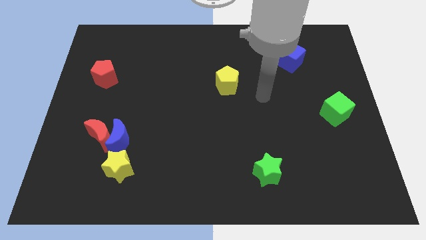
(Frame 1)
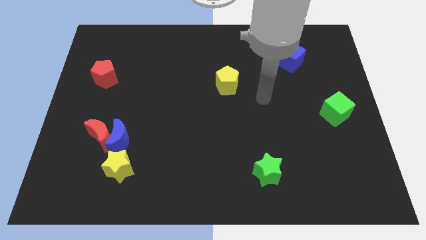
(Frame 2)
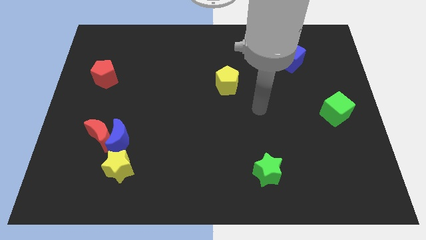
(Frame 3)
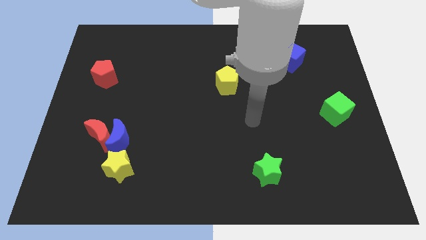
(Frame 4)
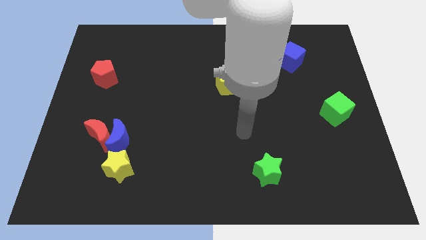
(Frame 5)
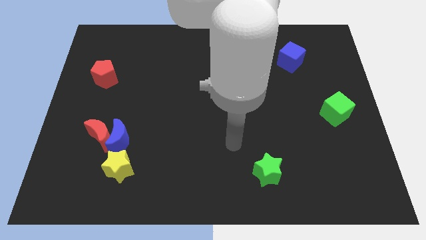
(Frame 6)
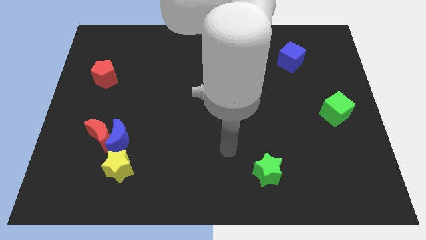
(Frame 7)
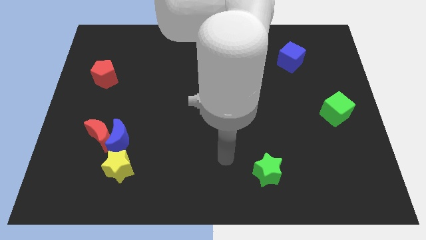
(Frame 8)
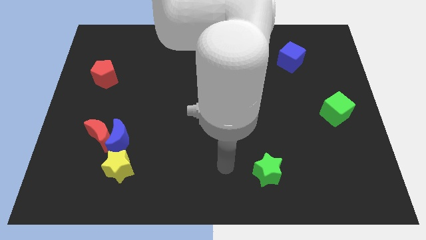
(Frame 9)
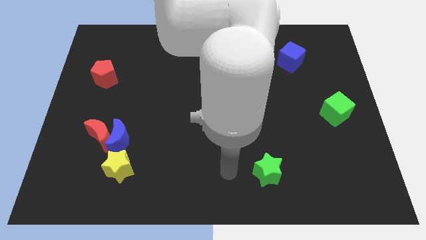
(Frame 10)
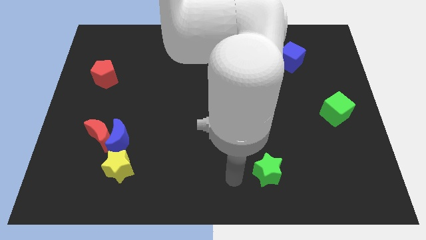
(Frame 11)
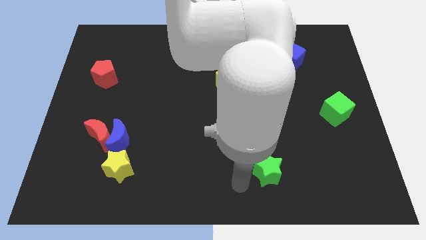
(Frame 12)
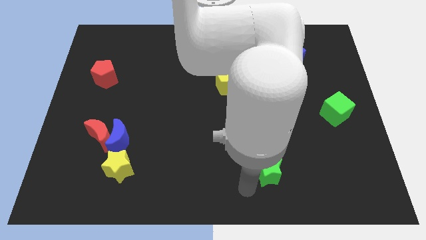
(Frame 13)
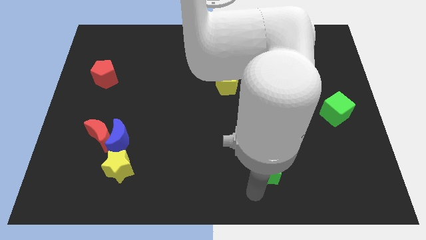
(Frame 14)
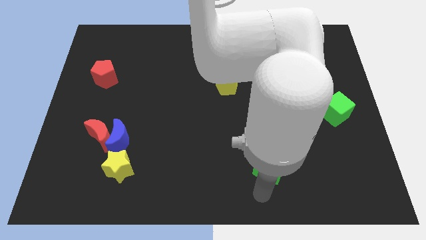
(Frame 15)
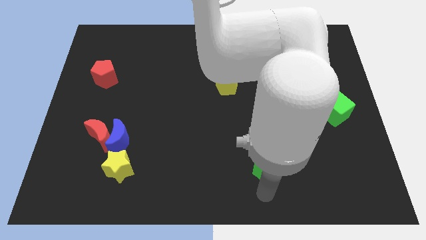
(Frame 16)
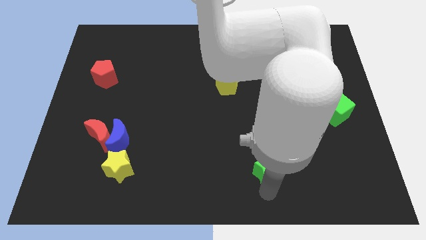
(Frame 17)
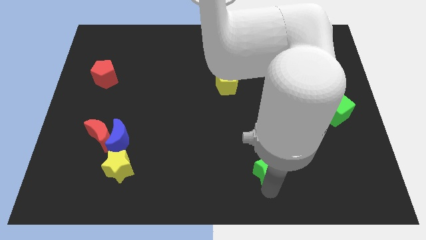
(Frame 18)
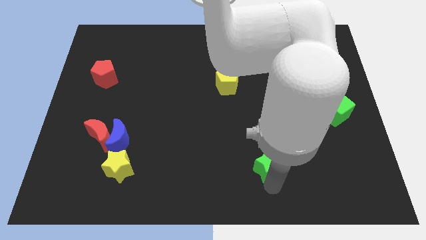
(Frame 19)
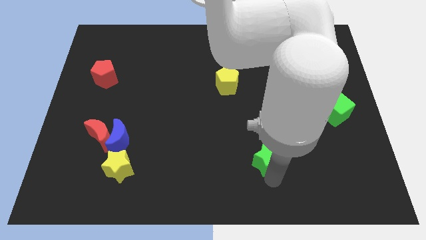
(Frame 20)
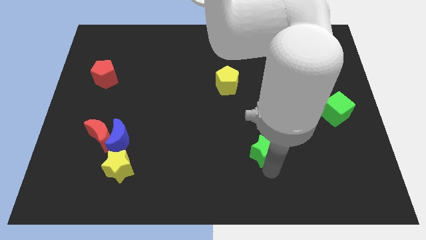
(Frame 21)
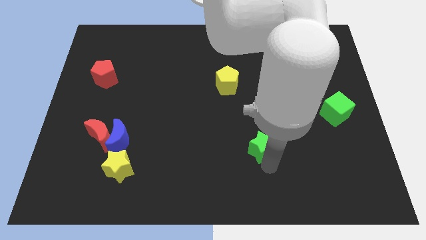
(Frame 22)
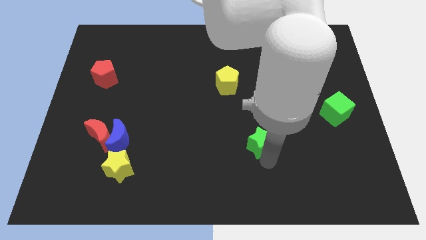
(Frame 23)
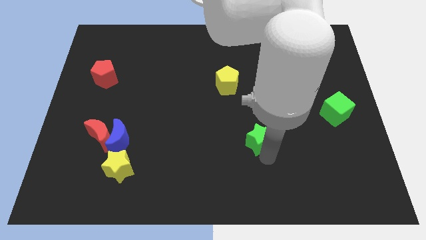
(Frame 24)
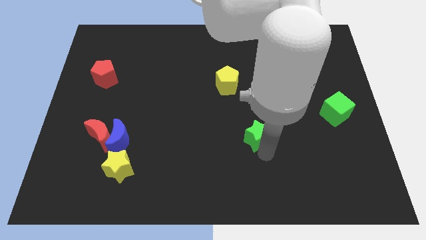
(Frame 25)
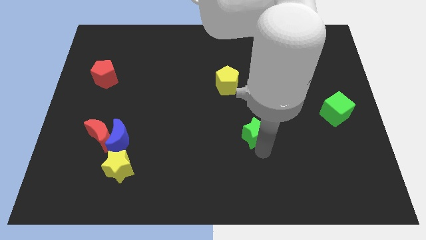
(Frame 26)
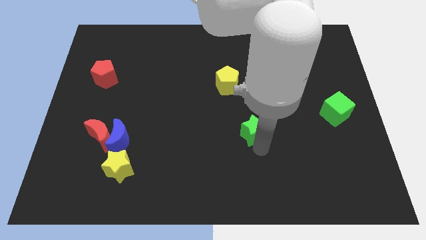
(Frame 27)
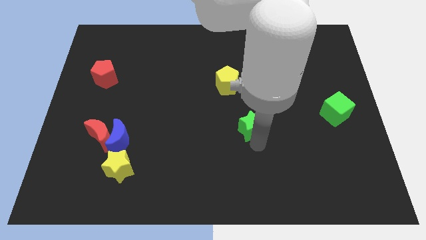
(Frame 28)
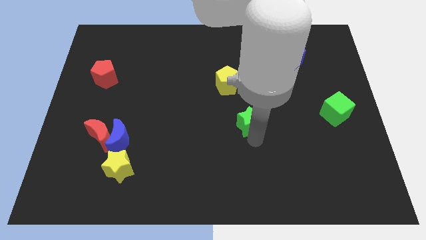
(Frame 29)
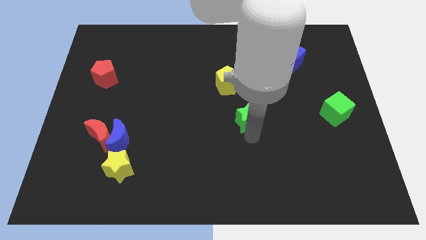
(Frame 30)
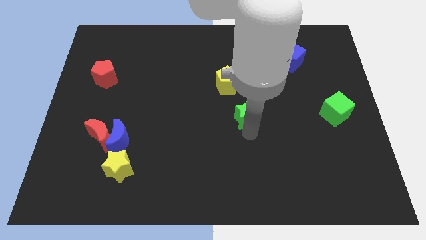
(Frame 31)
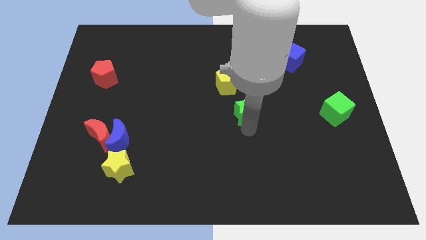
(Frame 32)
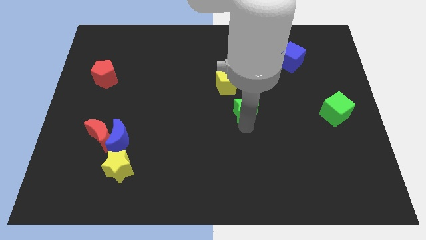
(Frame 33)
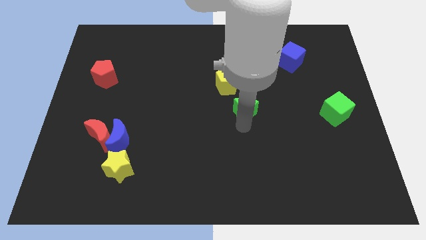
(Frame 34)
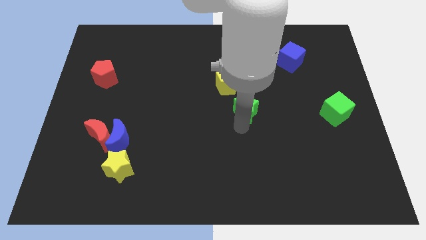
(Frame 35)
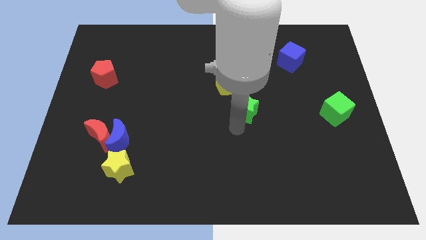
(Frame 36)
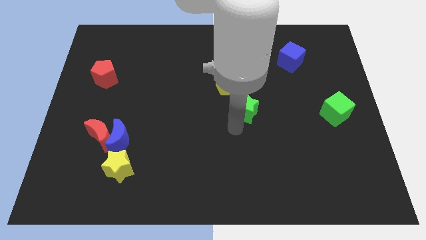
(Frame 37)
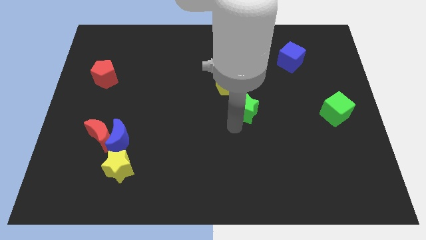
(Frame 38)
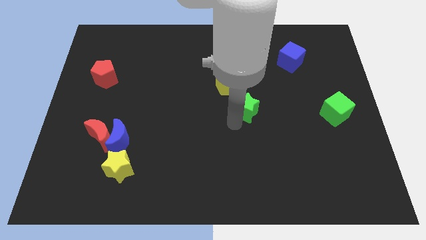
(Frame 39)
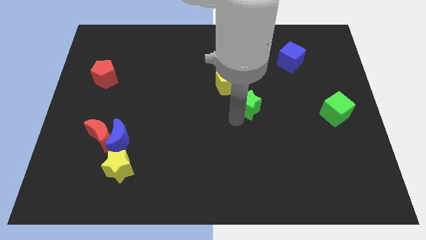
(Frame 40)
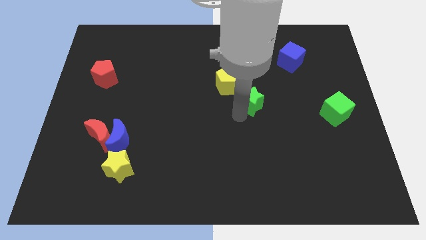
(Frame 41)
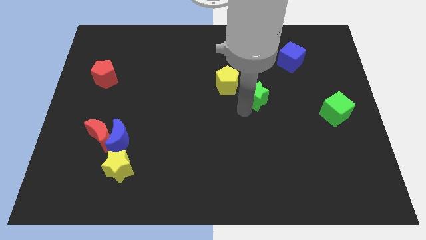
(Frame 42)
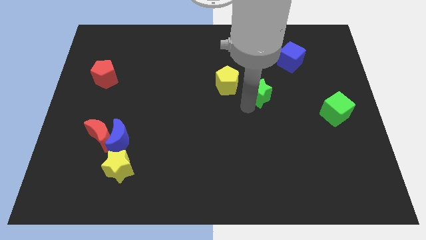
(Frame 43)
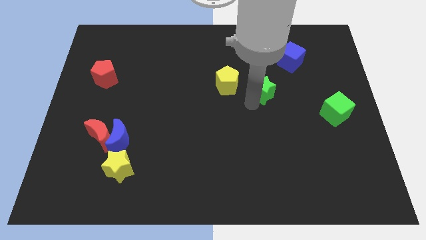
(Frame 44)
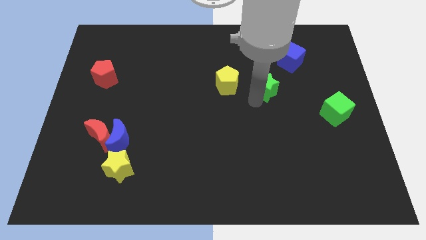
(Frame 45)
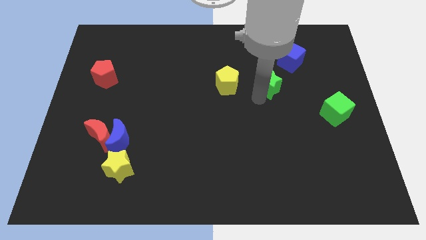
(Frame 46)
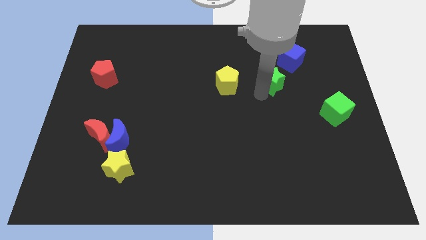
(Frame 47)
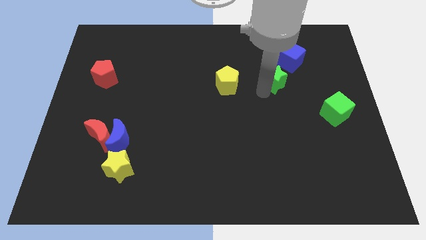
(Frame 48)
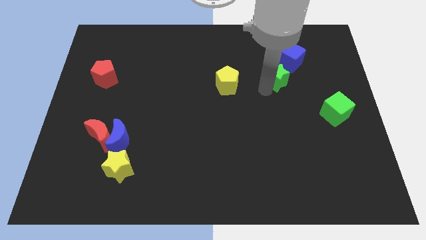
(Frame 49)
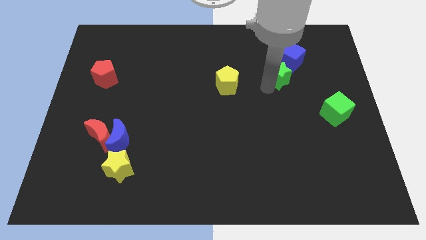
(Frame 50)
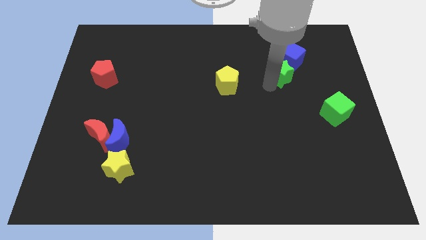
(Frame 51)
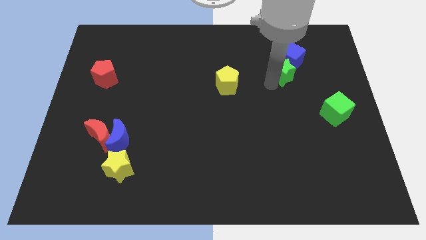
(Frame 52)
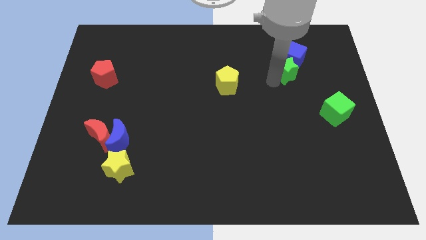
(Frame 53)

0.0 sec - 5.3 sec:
move the green star close to the blue cube

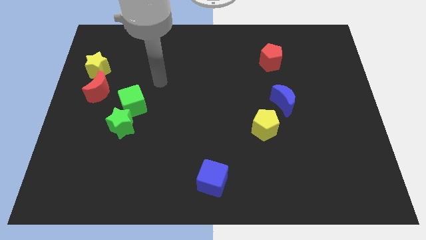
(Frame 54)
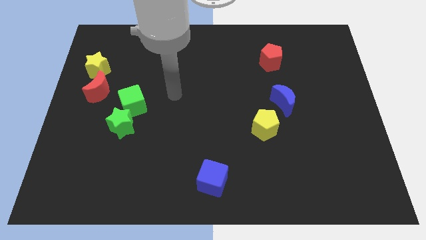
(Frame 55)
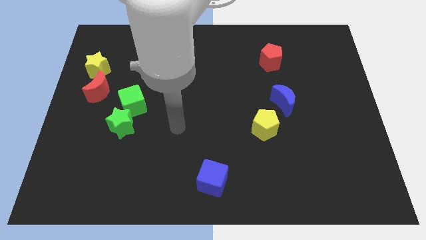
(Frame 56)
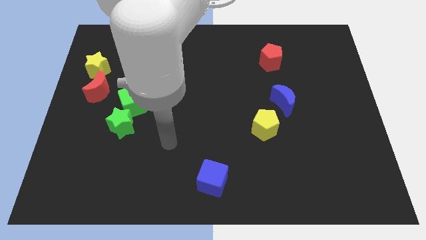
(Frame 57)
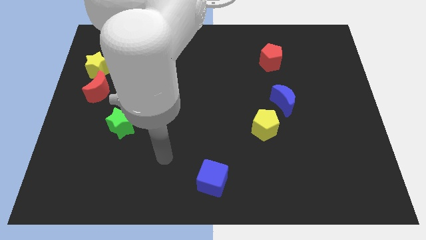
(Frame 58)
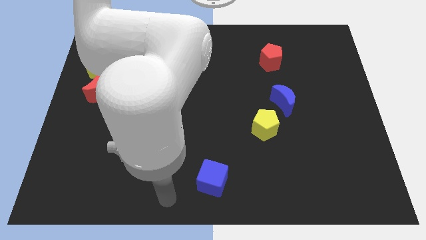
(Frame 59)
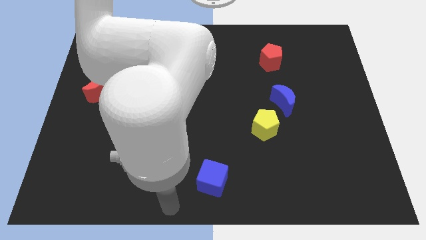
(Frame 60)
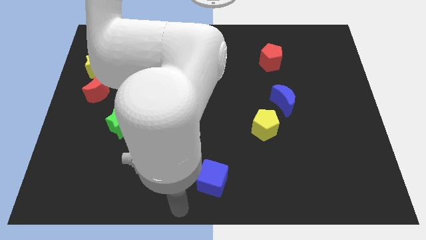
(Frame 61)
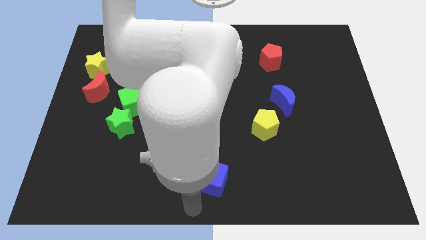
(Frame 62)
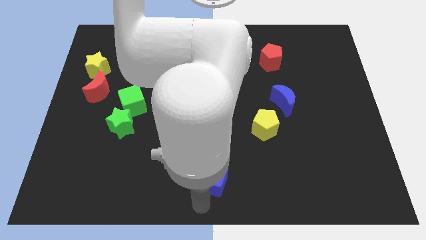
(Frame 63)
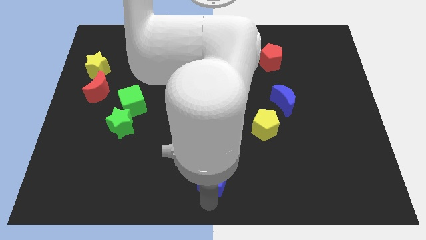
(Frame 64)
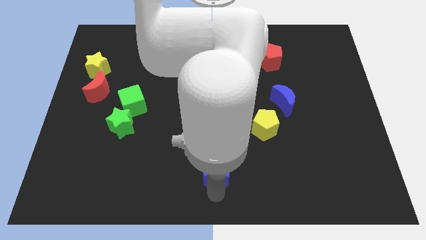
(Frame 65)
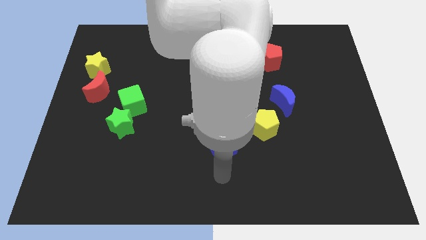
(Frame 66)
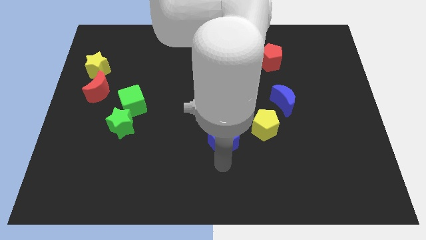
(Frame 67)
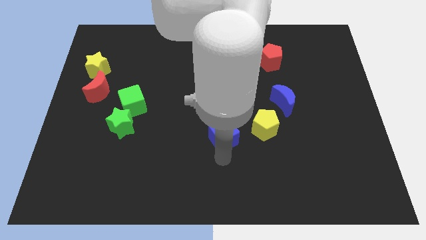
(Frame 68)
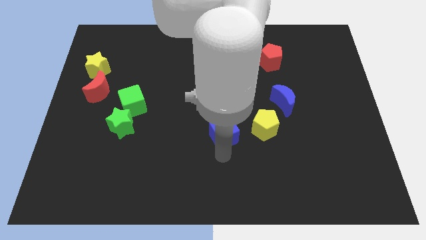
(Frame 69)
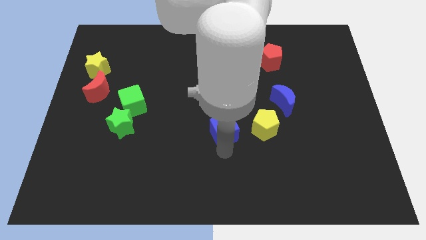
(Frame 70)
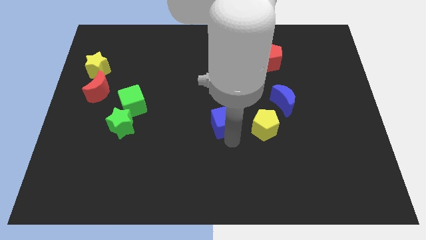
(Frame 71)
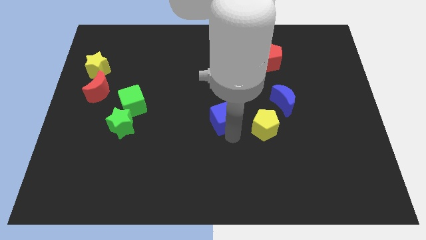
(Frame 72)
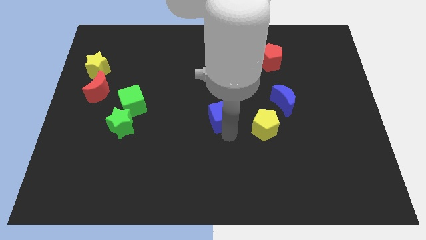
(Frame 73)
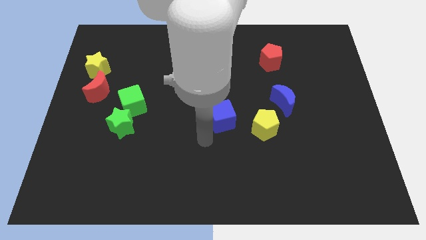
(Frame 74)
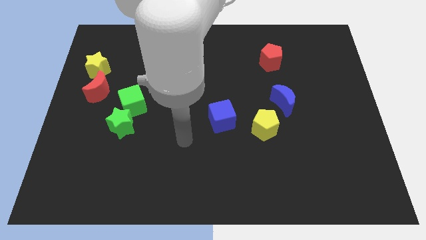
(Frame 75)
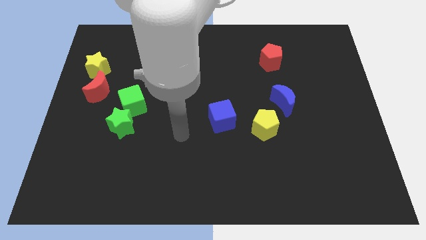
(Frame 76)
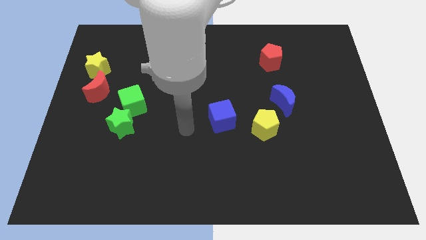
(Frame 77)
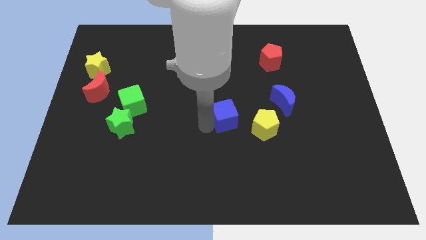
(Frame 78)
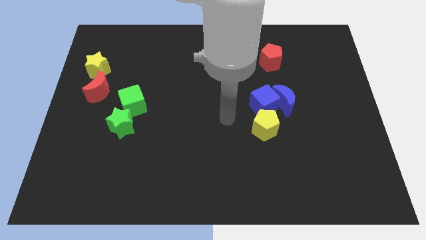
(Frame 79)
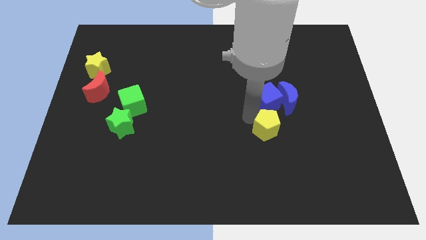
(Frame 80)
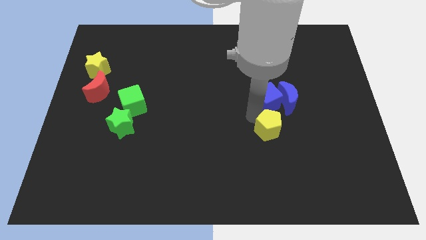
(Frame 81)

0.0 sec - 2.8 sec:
slide the blue cube to the blue moon

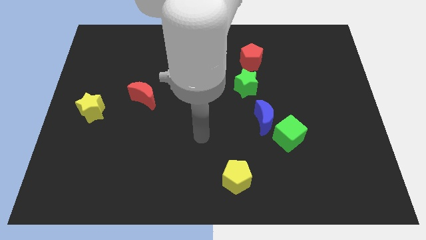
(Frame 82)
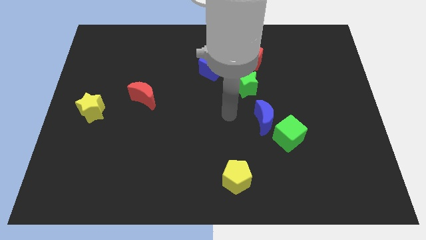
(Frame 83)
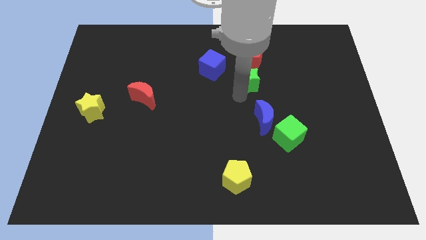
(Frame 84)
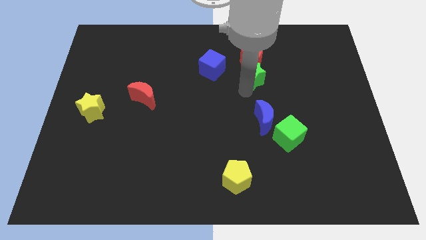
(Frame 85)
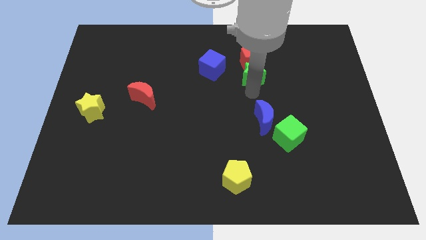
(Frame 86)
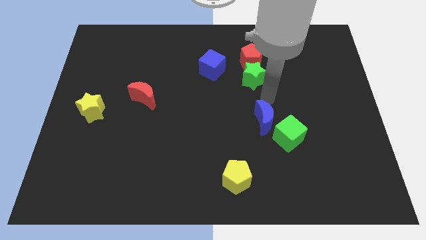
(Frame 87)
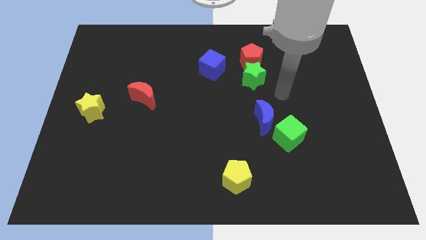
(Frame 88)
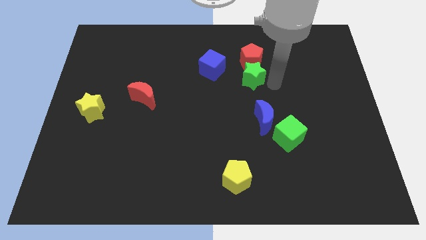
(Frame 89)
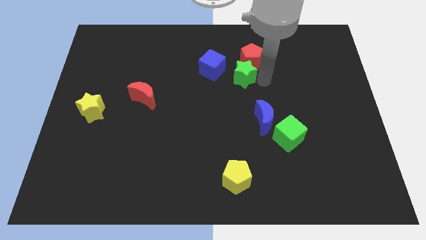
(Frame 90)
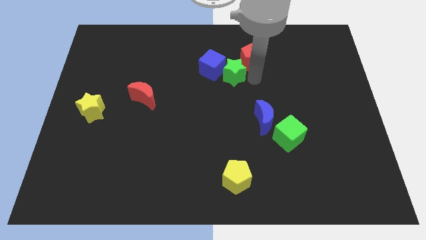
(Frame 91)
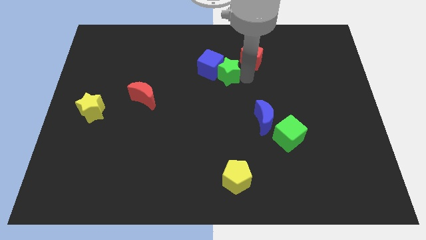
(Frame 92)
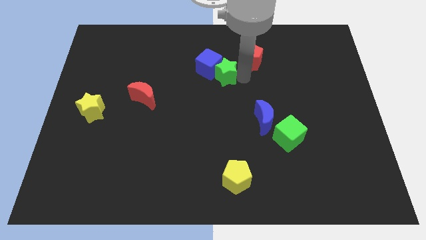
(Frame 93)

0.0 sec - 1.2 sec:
slide the green star towards the blue cube
